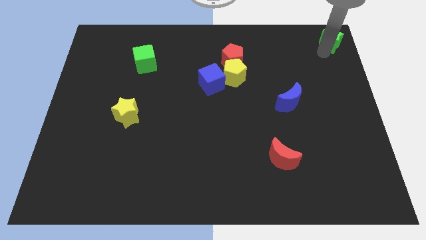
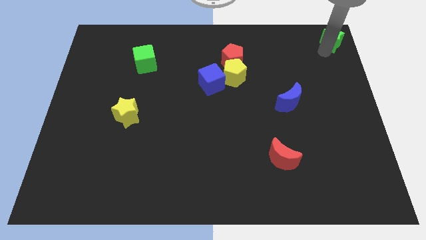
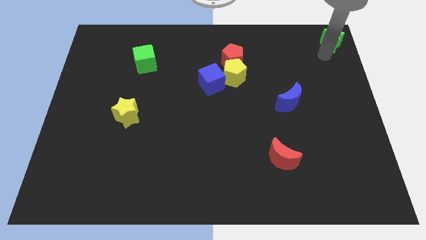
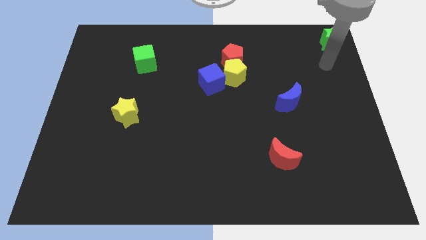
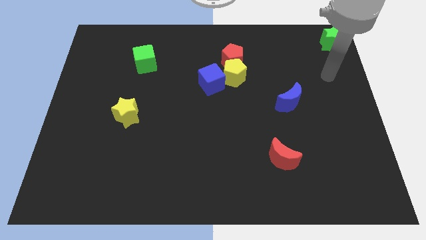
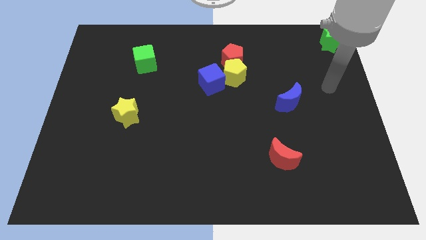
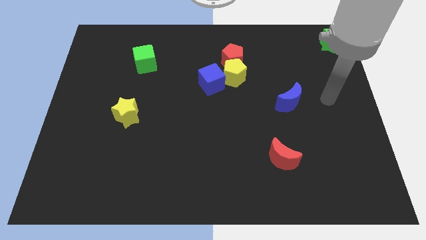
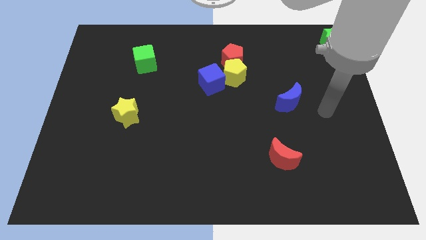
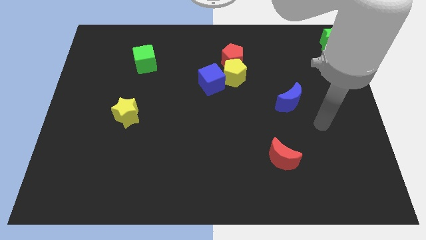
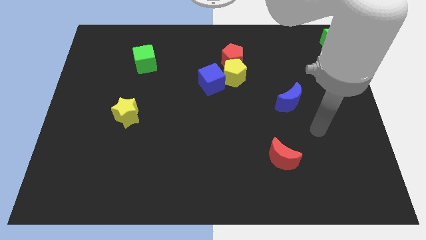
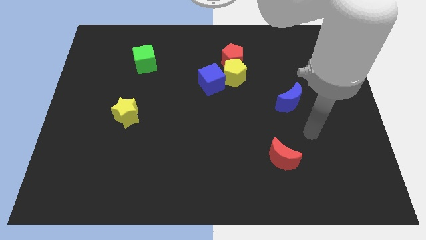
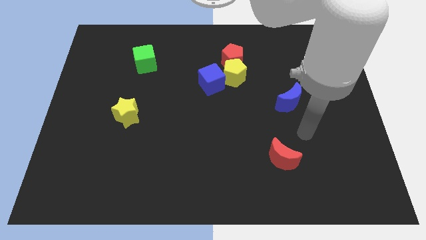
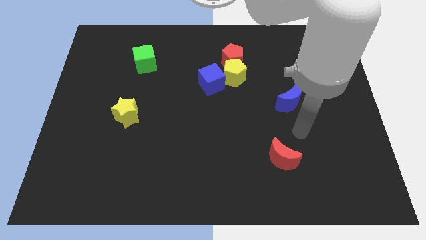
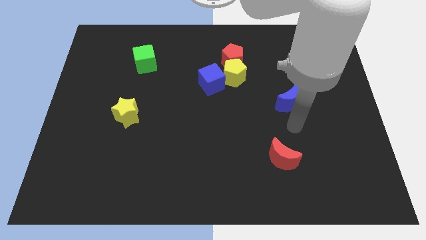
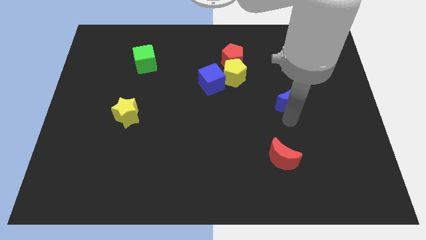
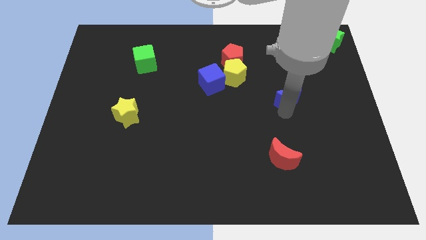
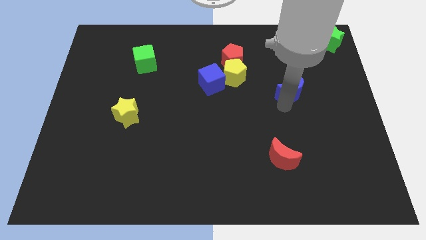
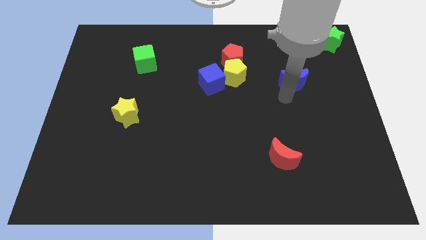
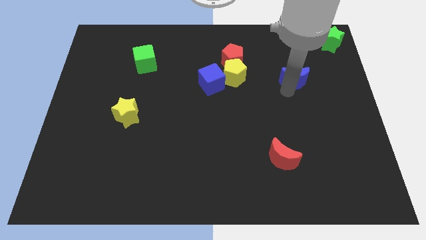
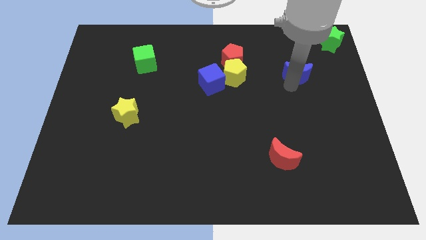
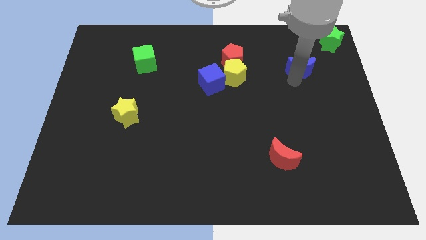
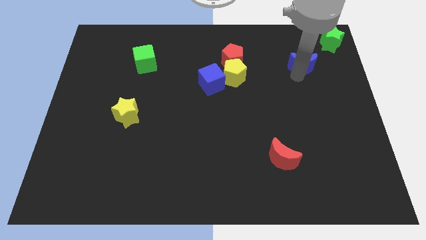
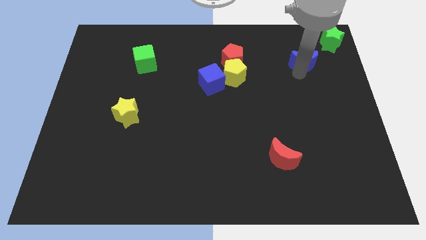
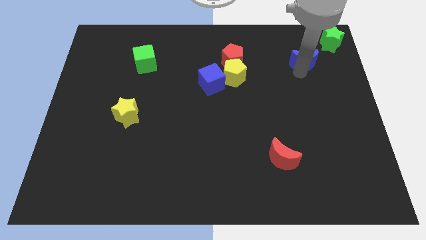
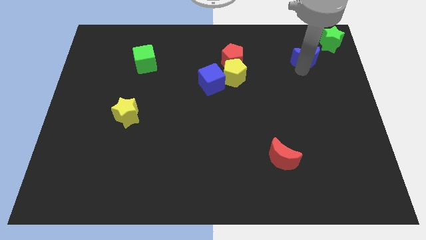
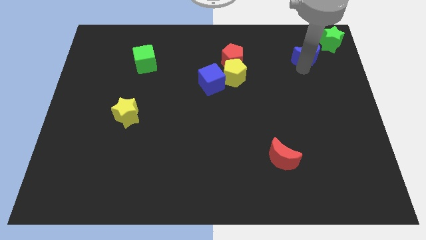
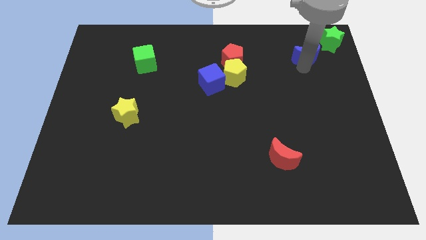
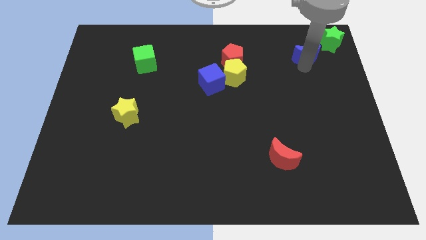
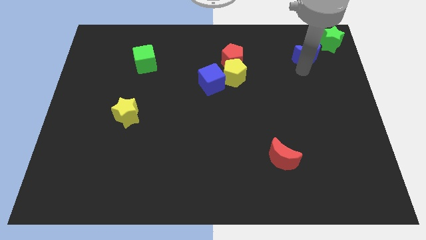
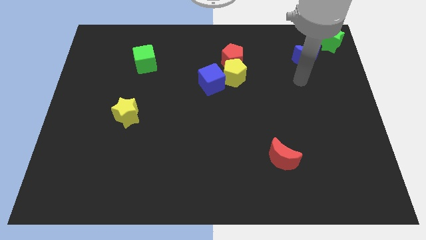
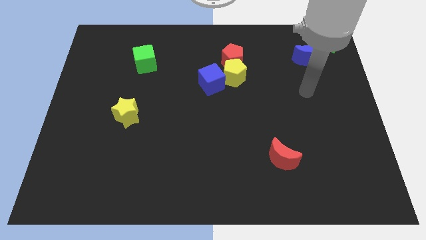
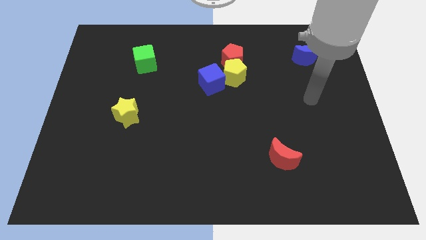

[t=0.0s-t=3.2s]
push the blue crescent at the bottom left side of green star

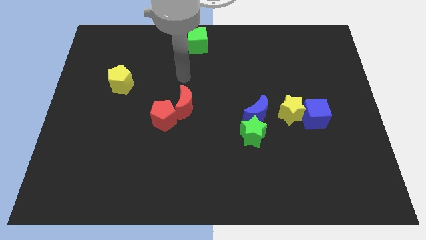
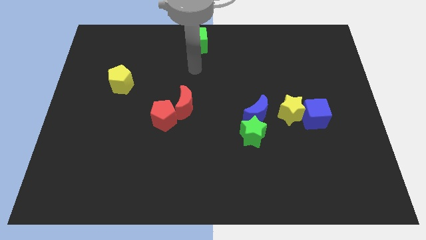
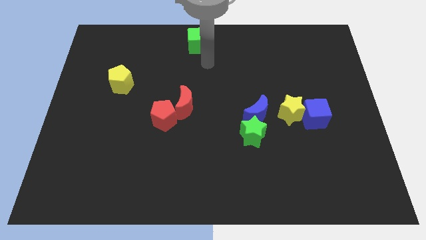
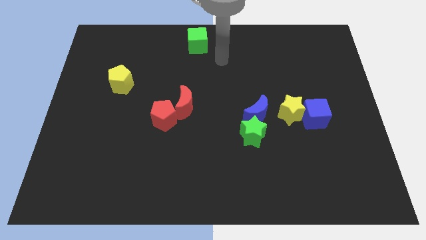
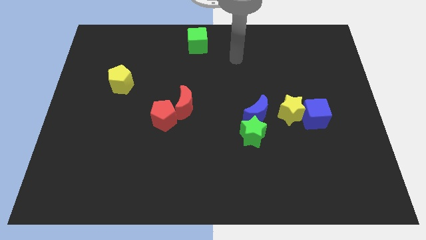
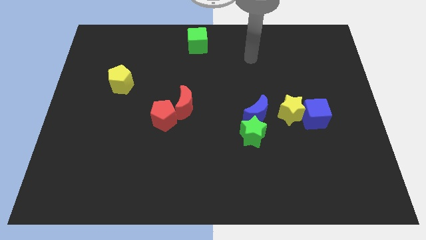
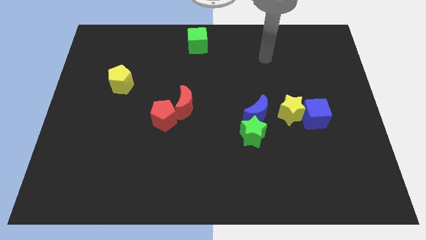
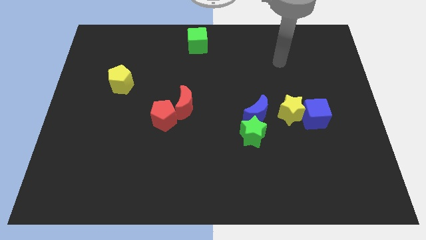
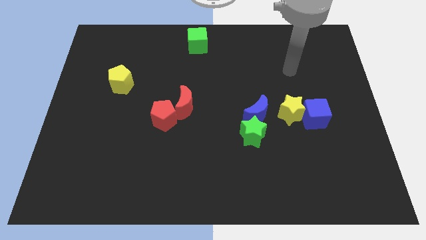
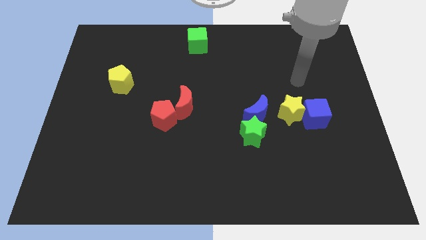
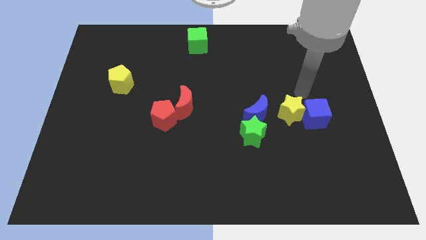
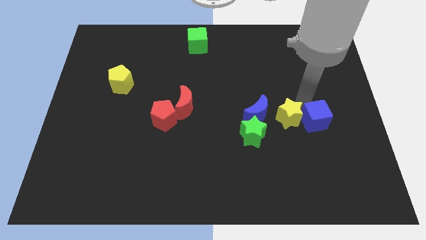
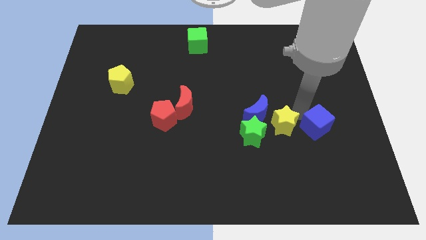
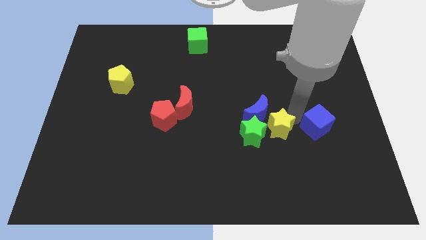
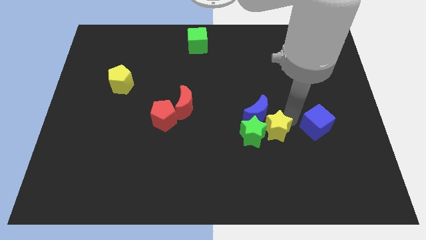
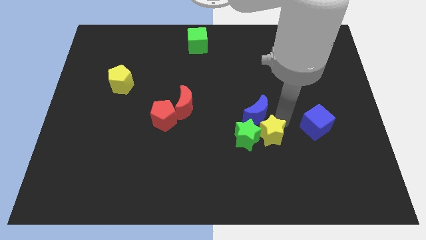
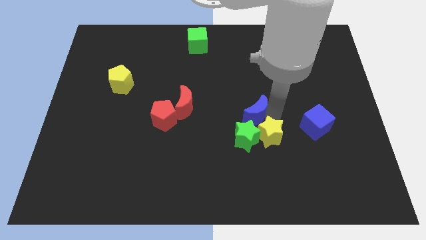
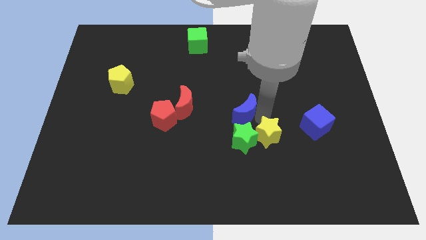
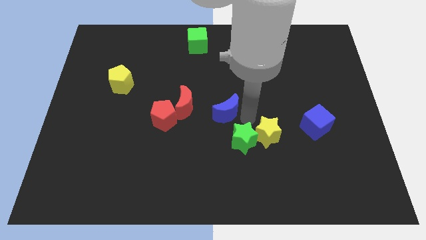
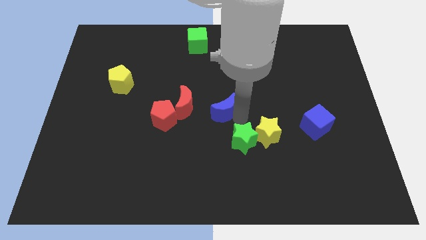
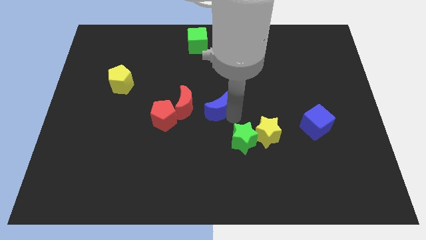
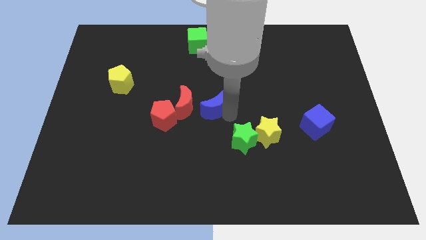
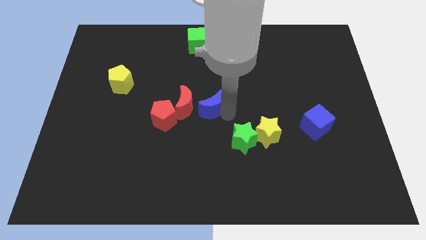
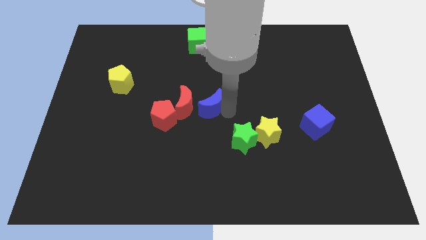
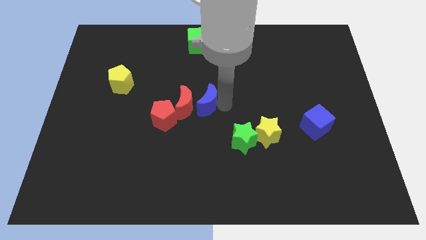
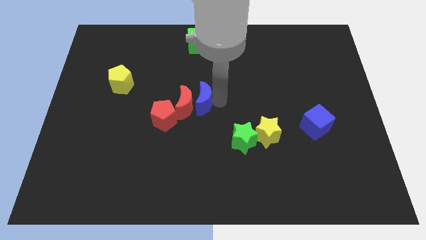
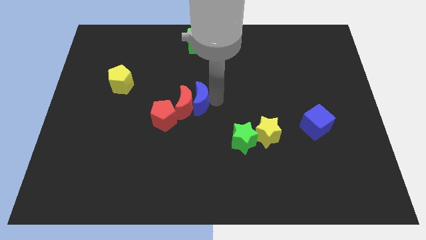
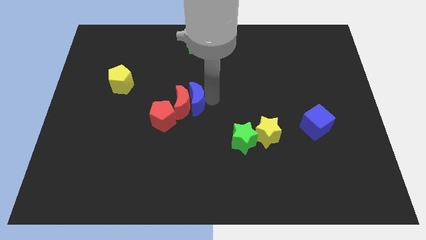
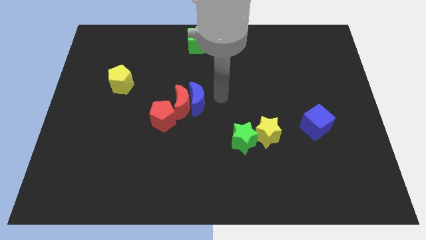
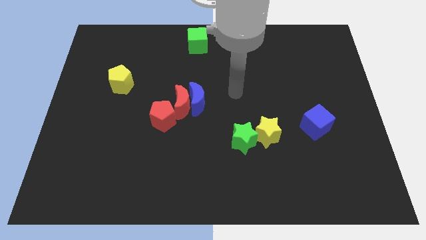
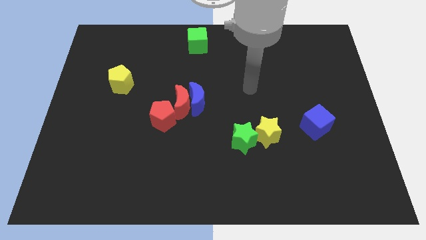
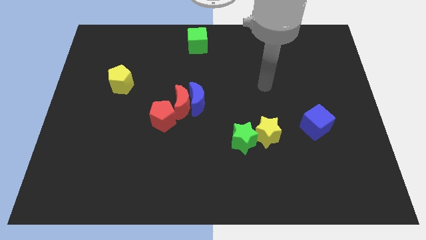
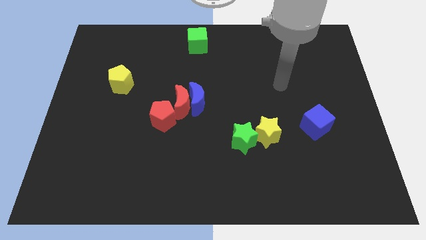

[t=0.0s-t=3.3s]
move the blue crescent to the right of the red crescent

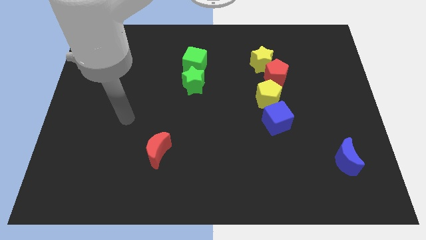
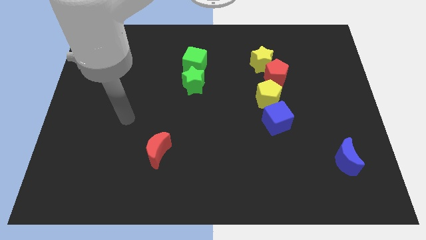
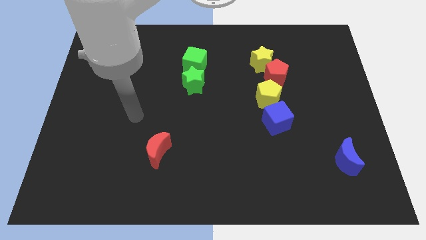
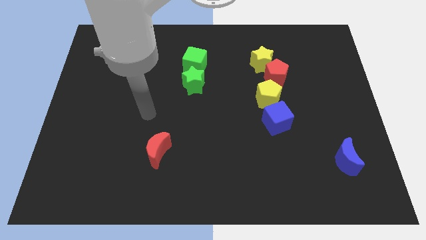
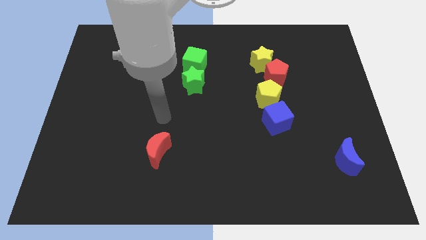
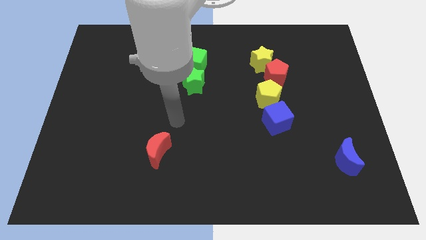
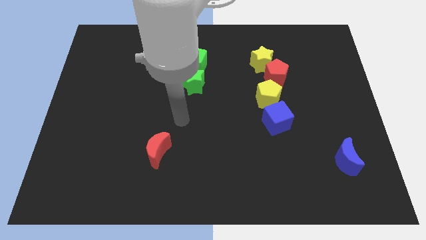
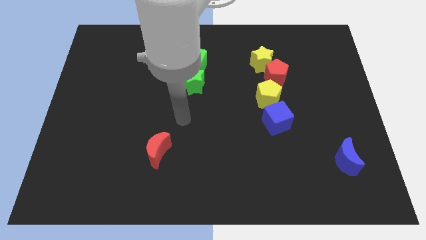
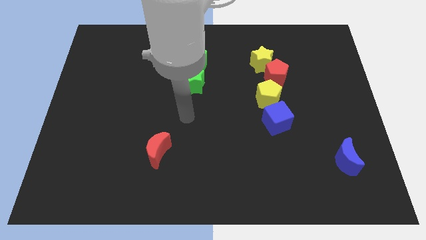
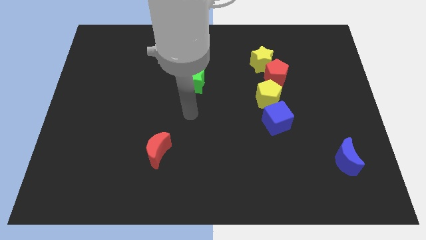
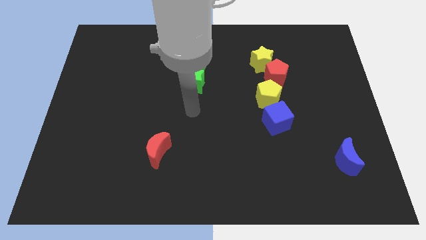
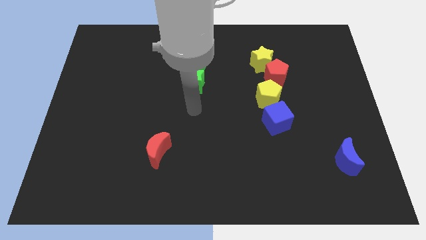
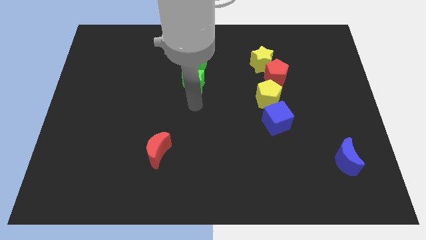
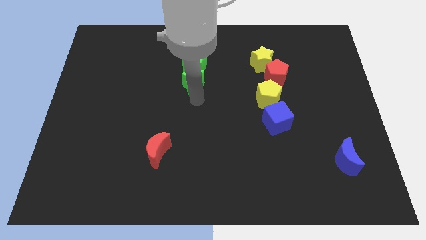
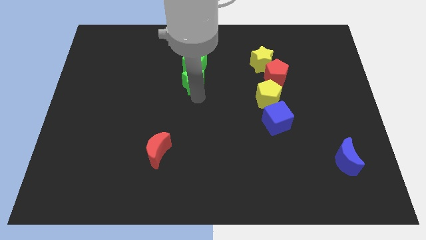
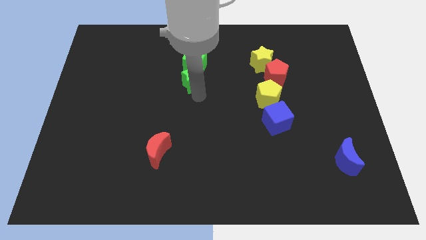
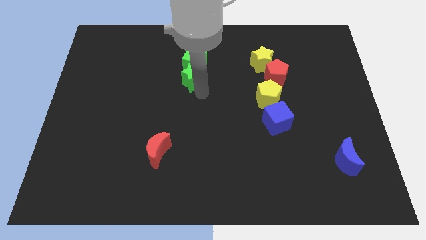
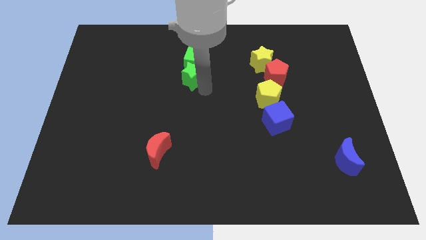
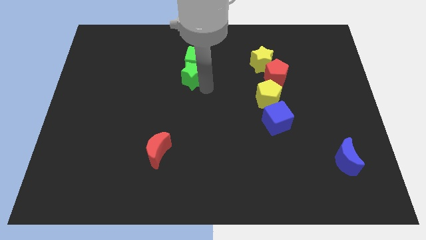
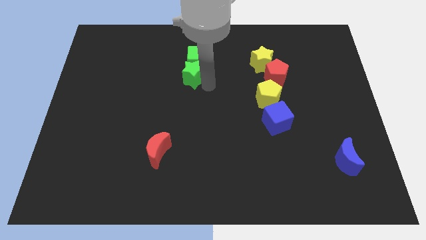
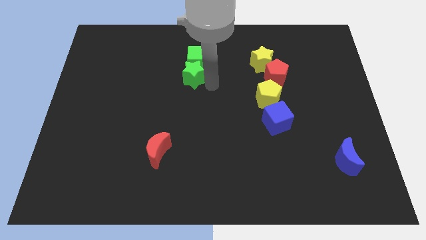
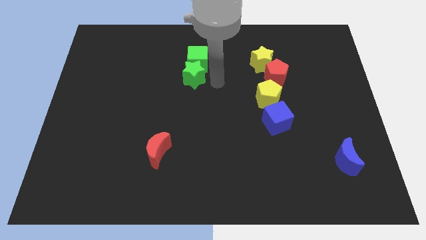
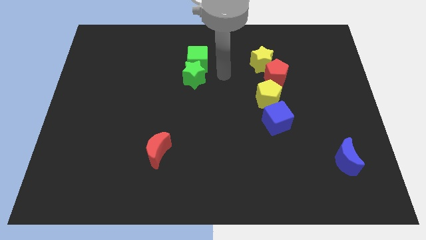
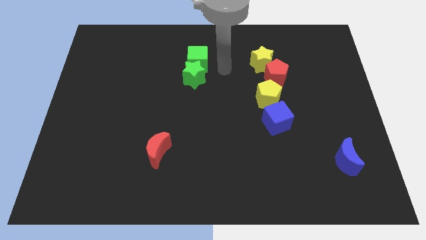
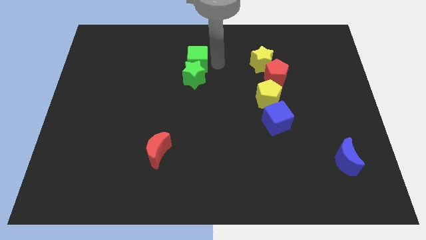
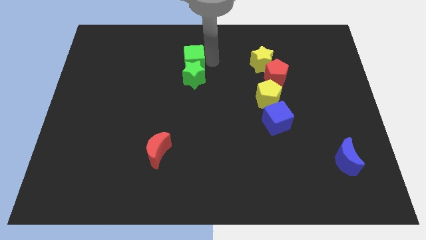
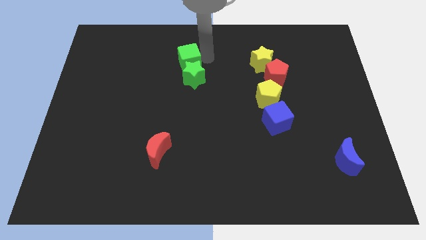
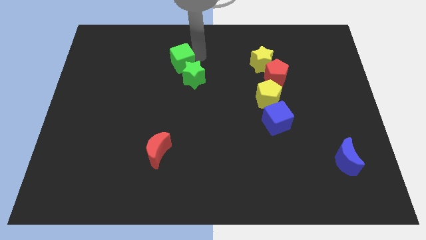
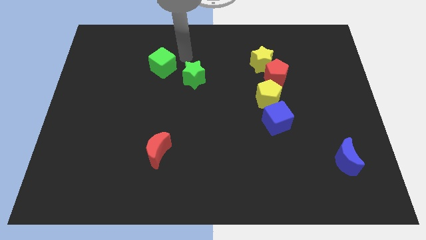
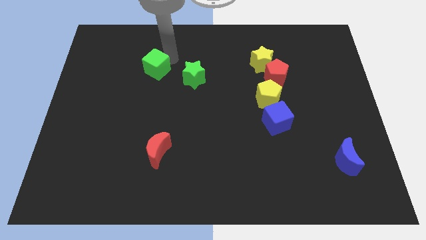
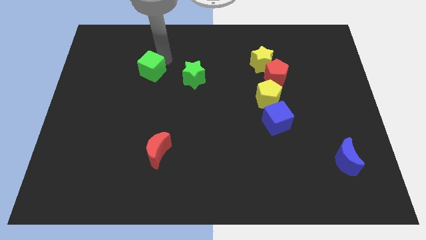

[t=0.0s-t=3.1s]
move the green cube diagonally left to the green star
